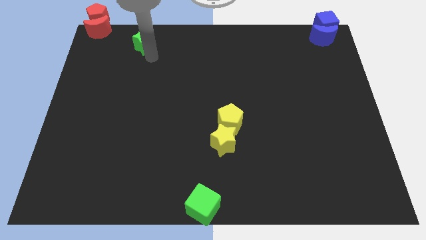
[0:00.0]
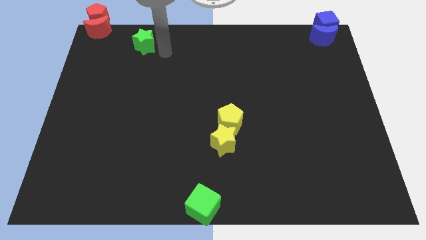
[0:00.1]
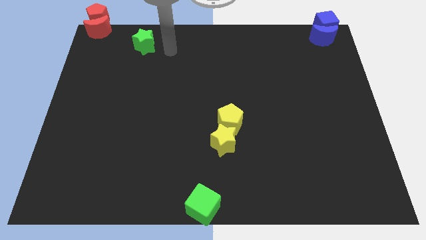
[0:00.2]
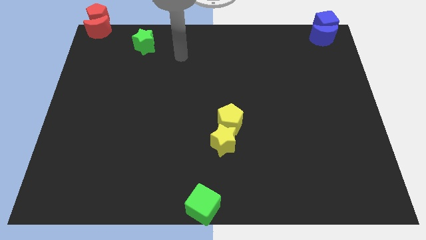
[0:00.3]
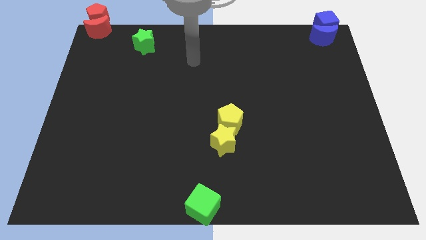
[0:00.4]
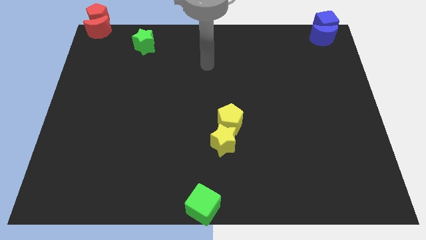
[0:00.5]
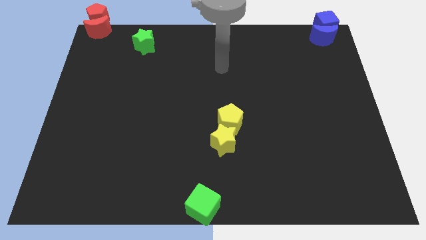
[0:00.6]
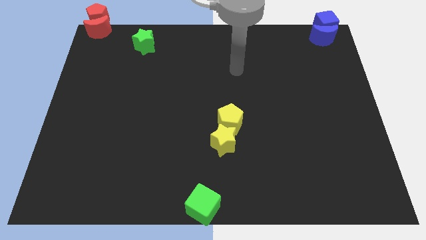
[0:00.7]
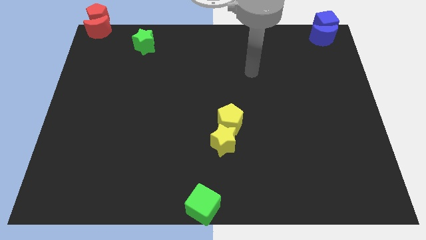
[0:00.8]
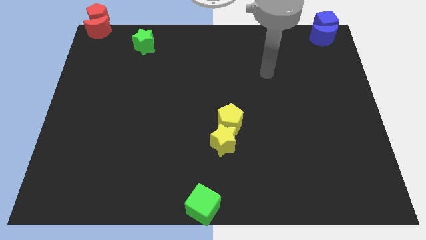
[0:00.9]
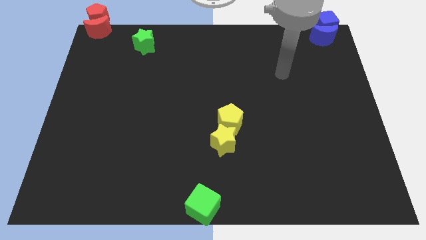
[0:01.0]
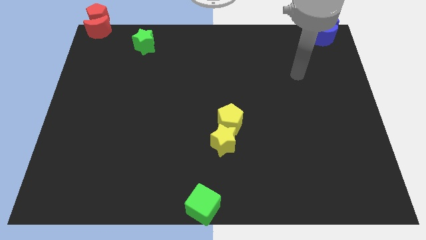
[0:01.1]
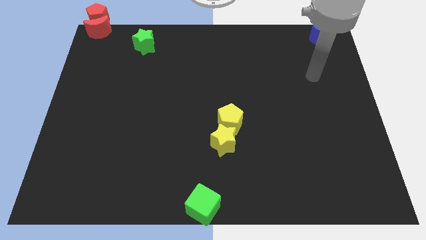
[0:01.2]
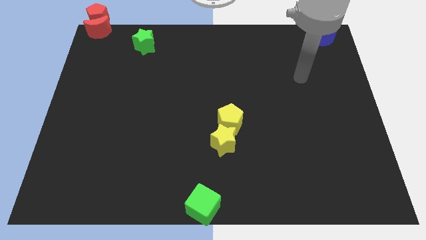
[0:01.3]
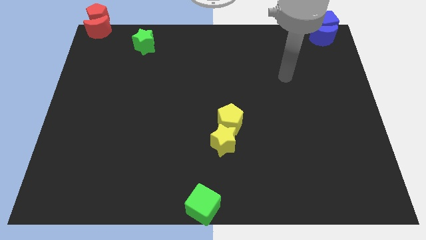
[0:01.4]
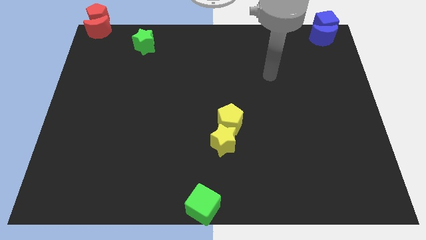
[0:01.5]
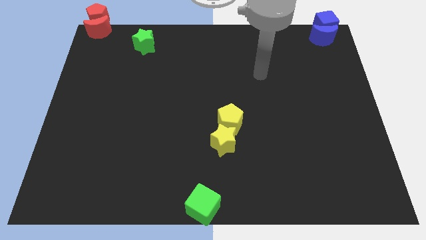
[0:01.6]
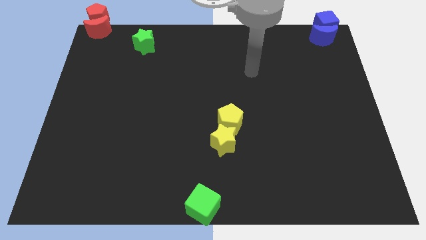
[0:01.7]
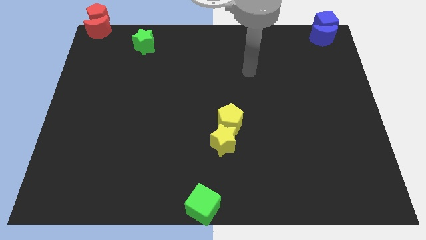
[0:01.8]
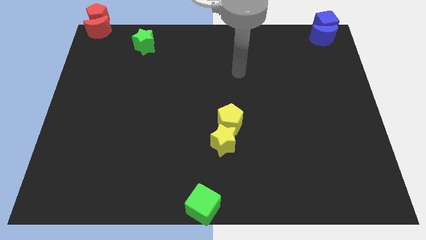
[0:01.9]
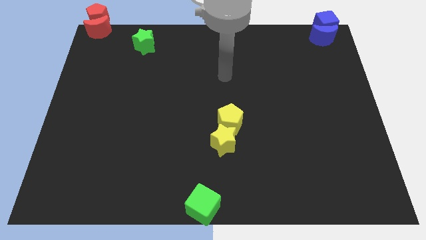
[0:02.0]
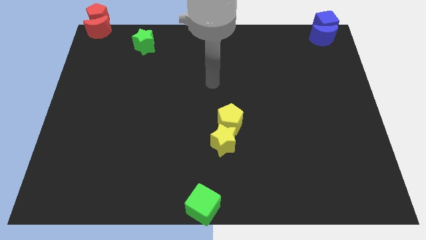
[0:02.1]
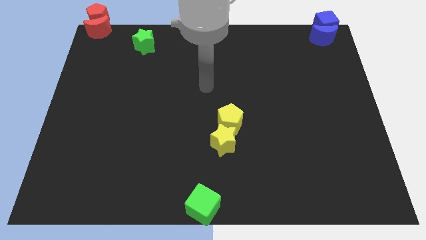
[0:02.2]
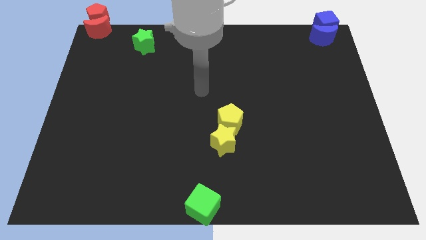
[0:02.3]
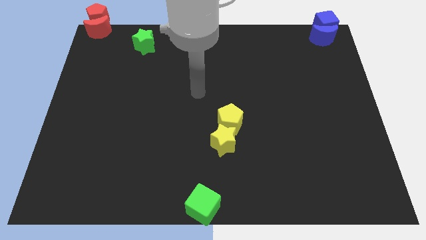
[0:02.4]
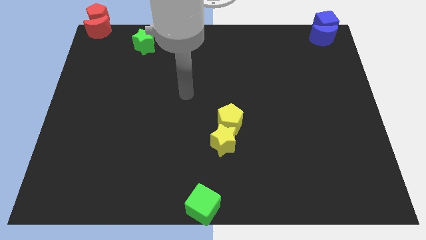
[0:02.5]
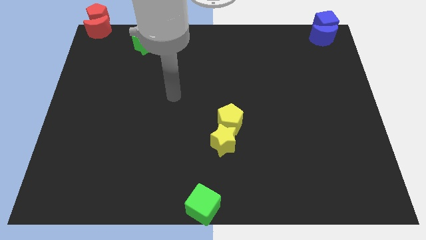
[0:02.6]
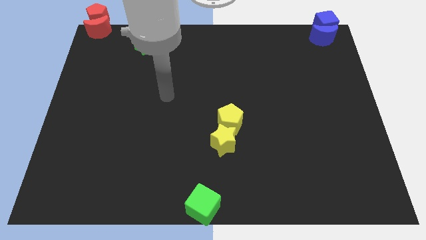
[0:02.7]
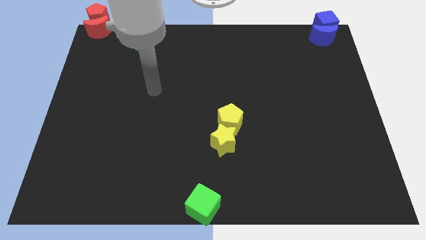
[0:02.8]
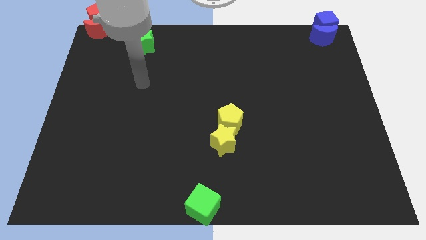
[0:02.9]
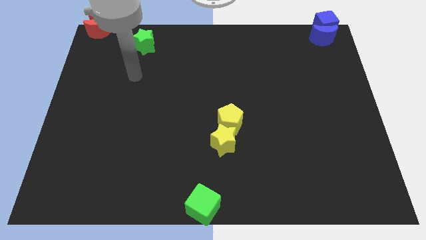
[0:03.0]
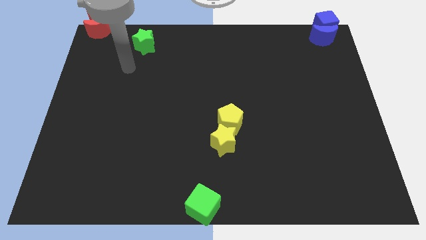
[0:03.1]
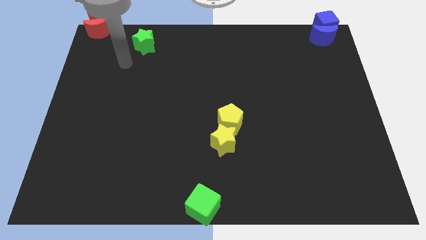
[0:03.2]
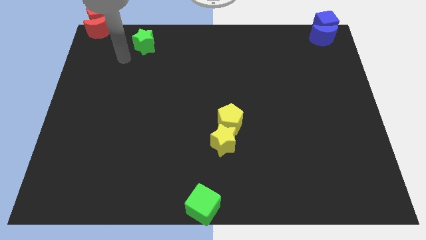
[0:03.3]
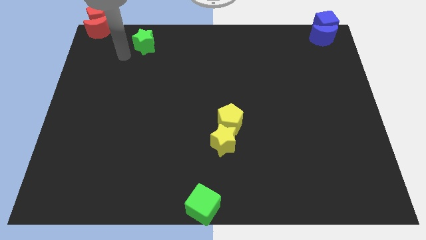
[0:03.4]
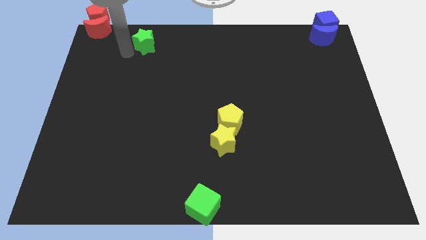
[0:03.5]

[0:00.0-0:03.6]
move your arm left to the green star

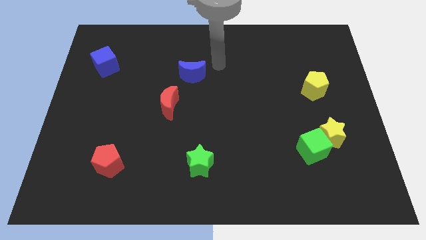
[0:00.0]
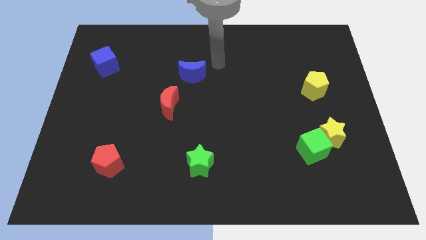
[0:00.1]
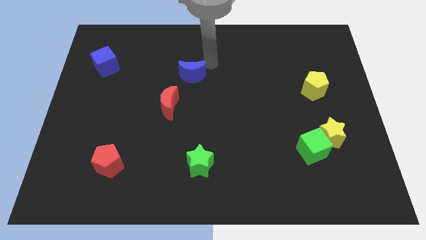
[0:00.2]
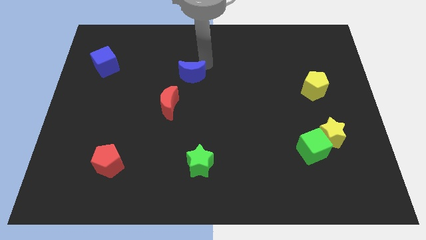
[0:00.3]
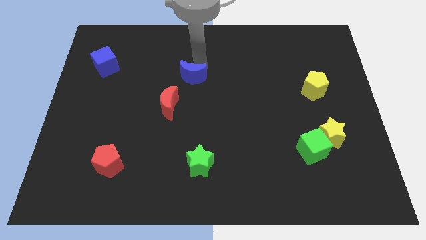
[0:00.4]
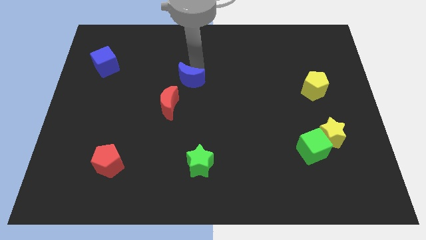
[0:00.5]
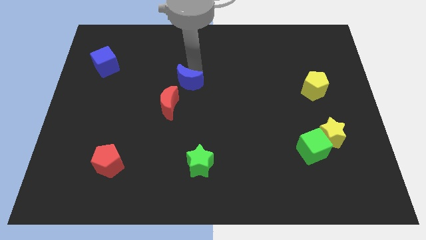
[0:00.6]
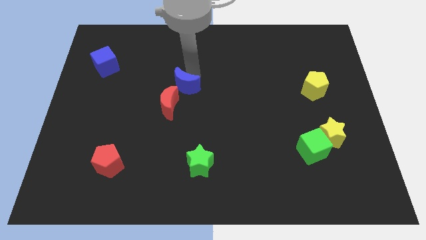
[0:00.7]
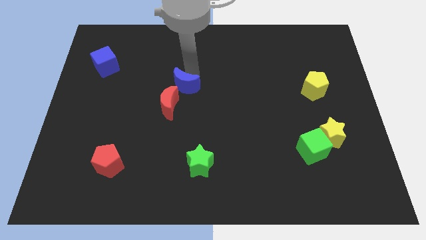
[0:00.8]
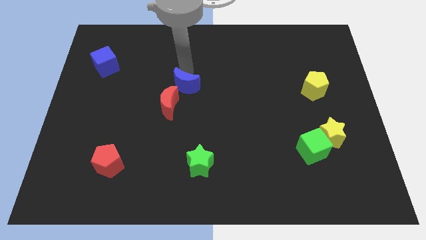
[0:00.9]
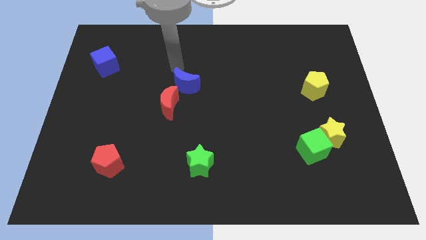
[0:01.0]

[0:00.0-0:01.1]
push blue moon towards red moon

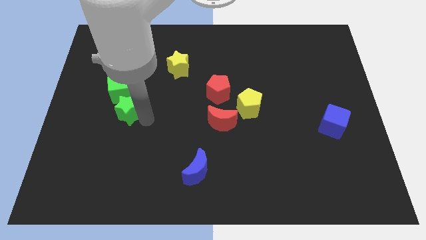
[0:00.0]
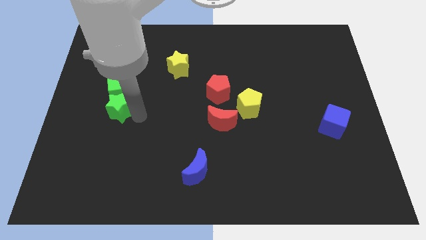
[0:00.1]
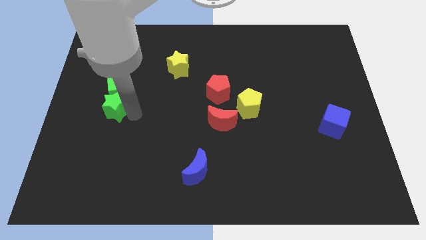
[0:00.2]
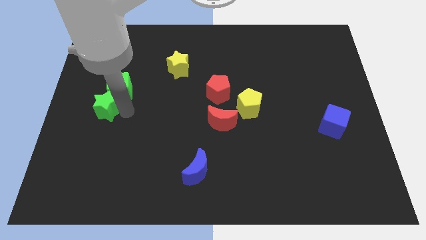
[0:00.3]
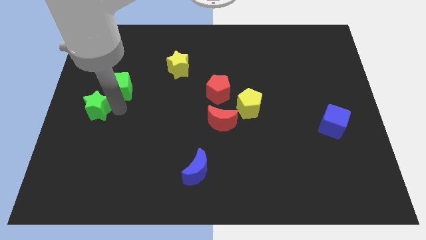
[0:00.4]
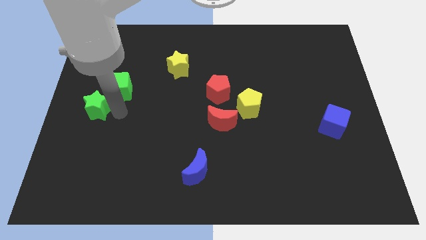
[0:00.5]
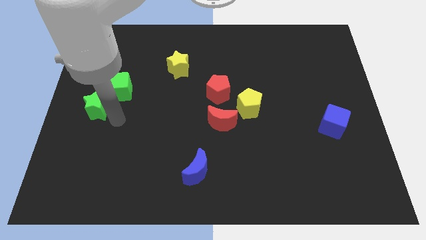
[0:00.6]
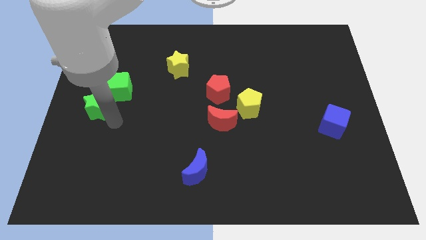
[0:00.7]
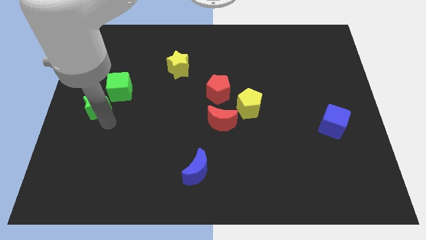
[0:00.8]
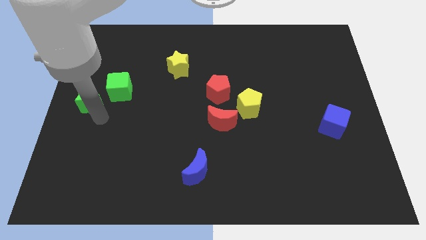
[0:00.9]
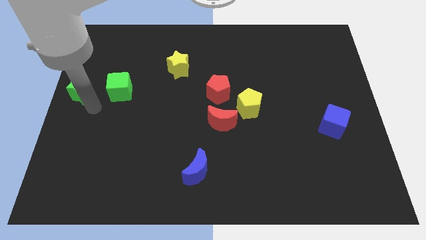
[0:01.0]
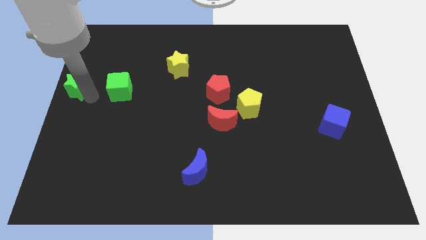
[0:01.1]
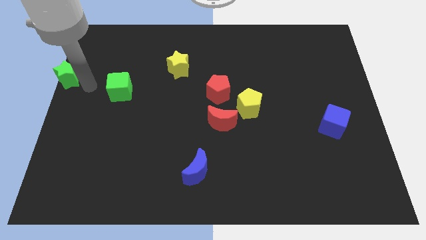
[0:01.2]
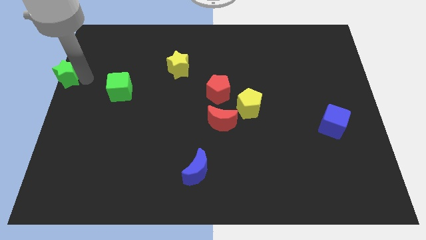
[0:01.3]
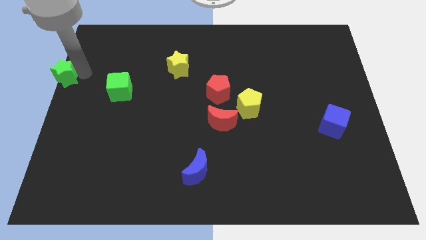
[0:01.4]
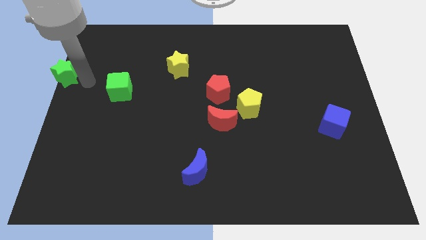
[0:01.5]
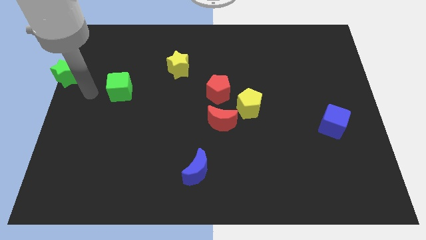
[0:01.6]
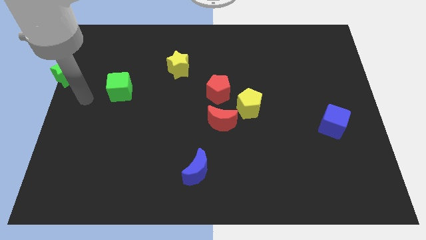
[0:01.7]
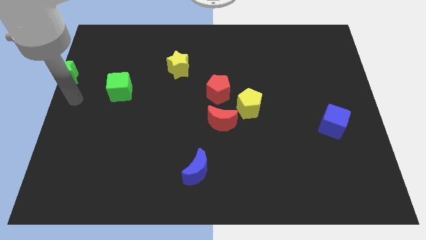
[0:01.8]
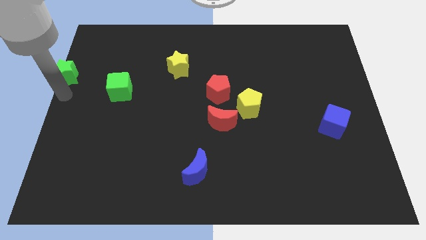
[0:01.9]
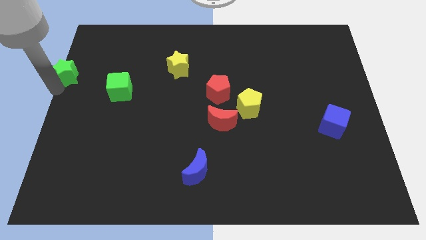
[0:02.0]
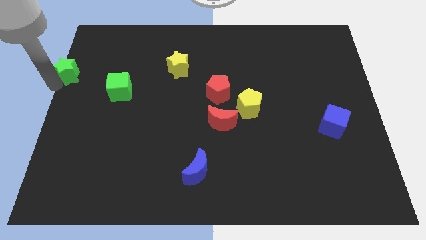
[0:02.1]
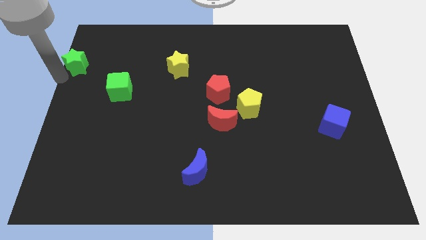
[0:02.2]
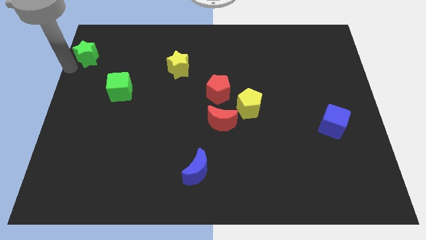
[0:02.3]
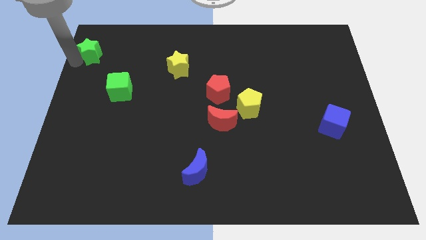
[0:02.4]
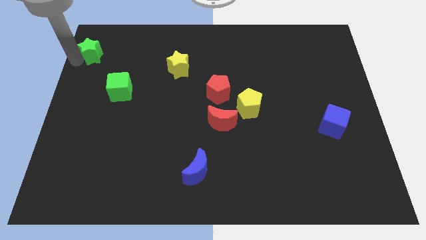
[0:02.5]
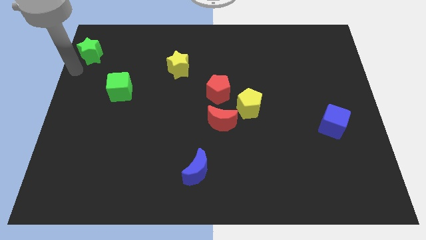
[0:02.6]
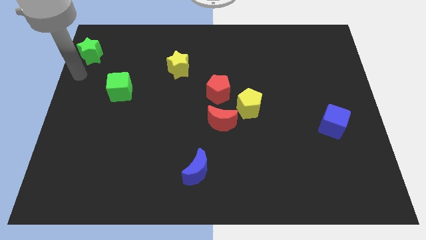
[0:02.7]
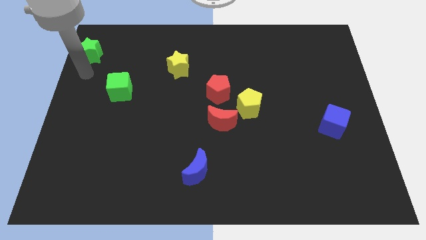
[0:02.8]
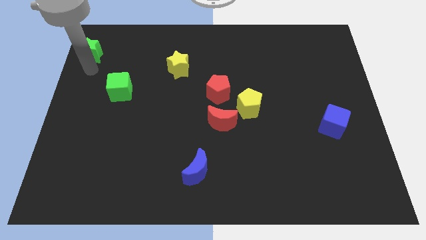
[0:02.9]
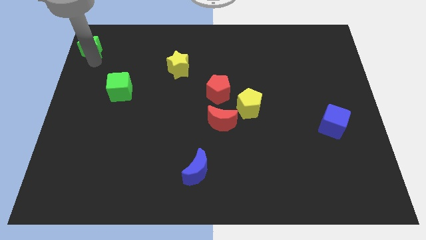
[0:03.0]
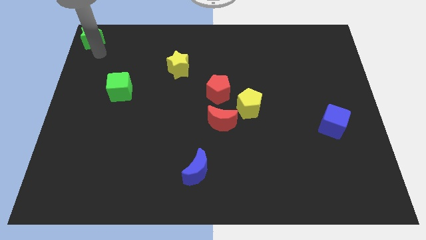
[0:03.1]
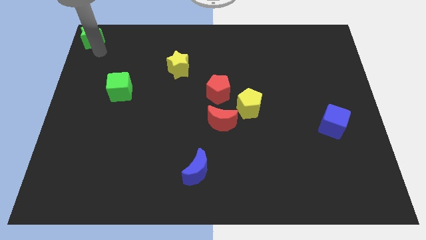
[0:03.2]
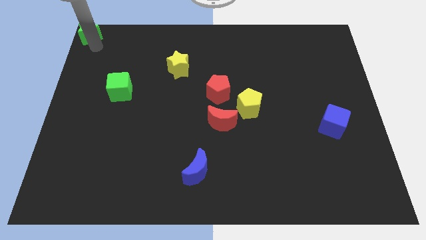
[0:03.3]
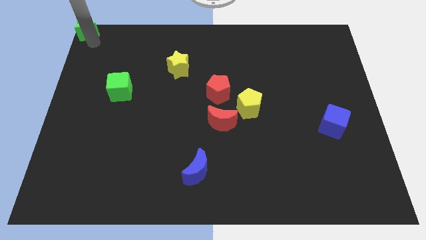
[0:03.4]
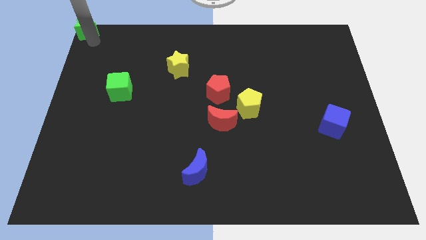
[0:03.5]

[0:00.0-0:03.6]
place green star to the top left corner of the board

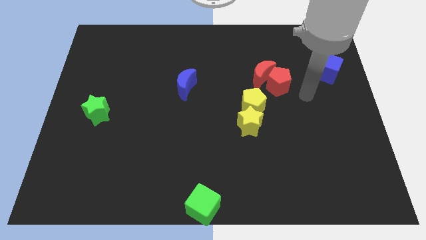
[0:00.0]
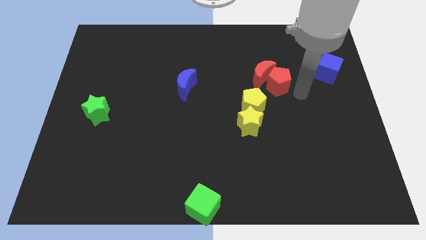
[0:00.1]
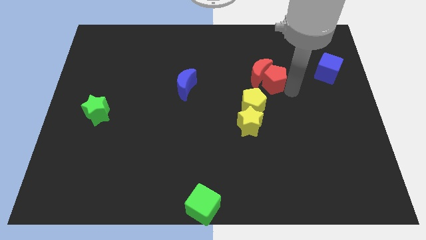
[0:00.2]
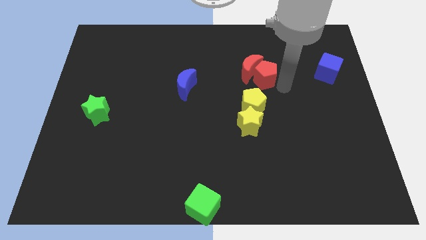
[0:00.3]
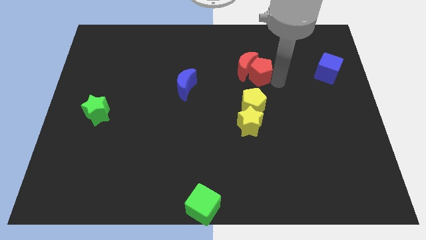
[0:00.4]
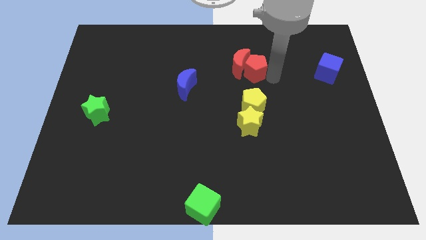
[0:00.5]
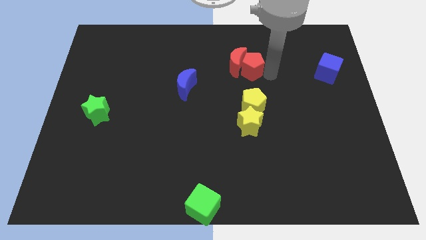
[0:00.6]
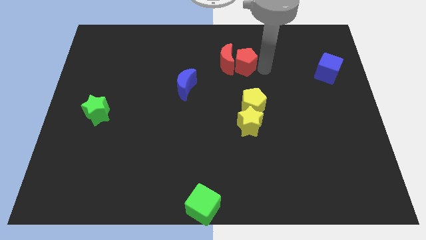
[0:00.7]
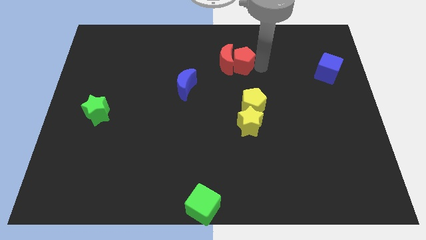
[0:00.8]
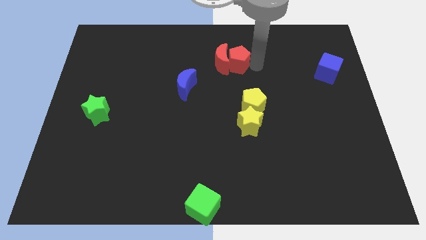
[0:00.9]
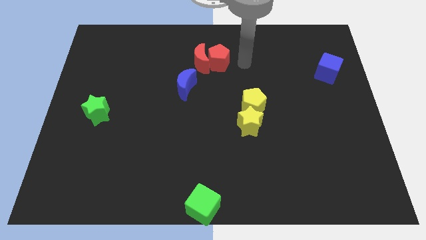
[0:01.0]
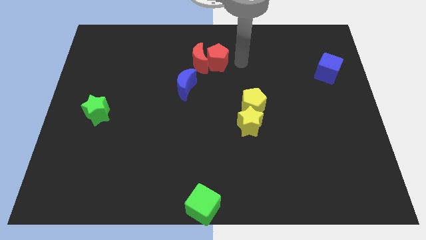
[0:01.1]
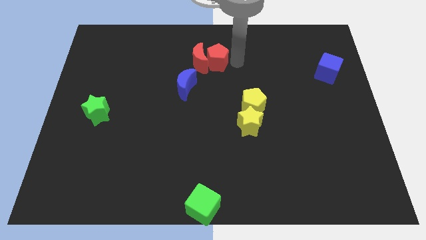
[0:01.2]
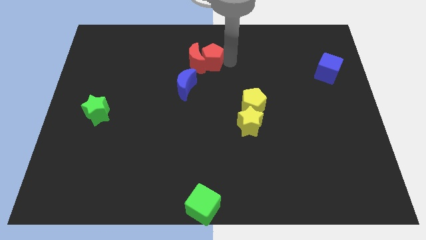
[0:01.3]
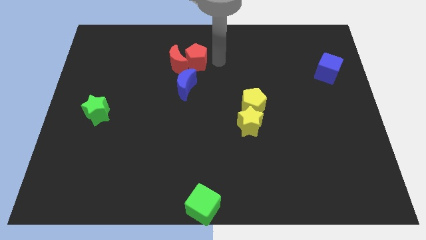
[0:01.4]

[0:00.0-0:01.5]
place the red pentagon above the blue crescent
